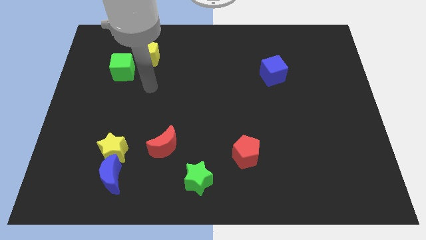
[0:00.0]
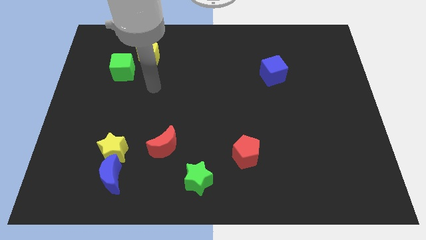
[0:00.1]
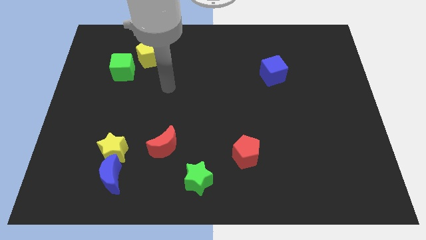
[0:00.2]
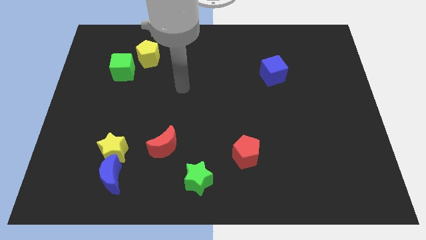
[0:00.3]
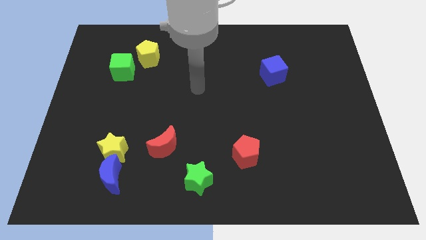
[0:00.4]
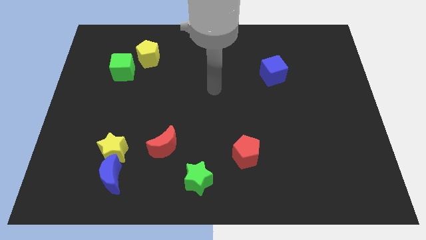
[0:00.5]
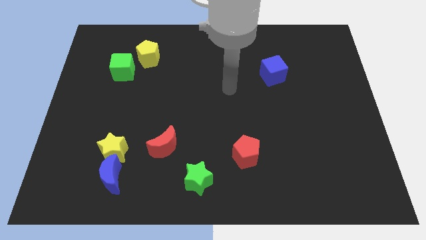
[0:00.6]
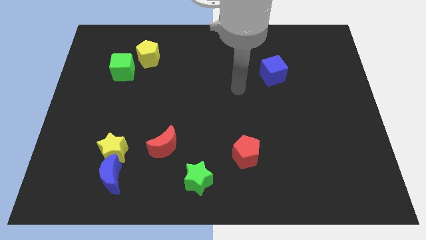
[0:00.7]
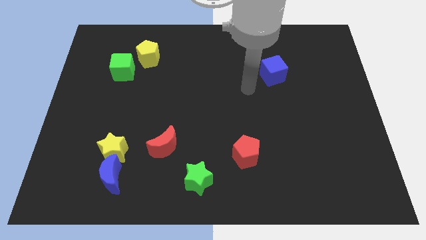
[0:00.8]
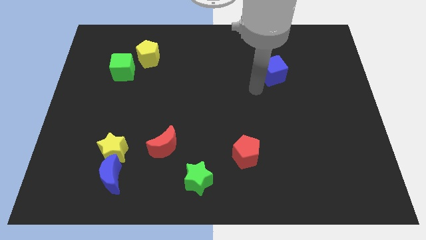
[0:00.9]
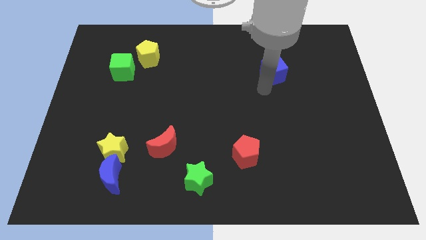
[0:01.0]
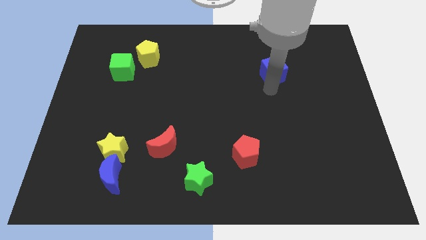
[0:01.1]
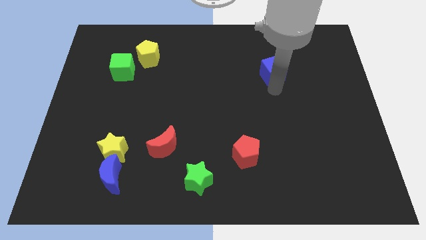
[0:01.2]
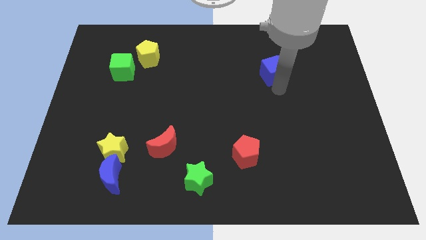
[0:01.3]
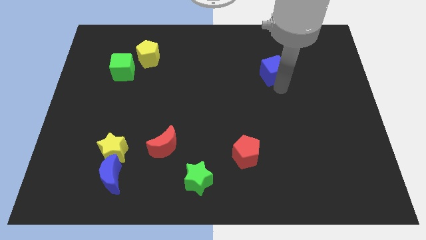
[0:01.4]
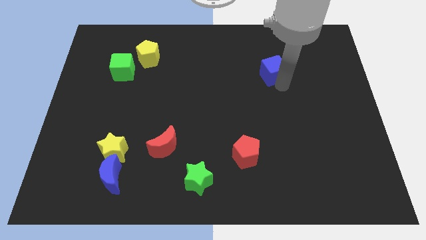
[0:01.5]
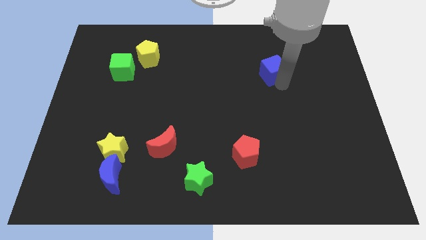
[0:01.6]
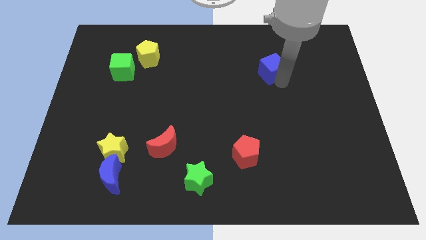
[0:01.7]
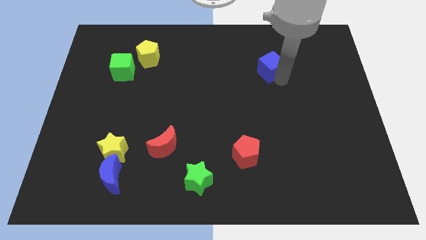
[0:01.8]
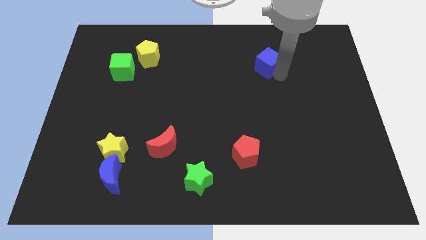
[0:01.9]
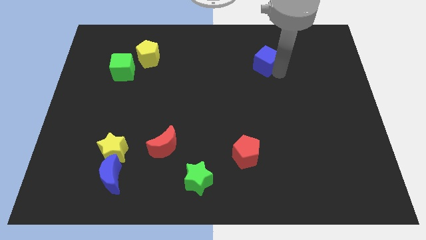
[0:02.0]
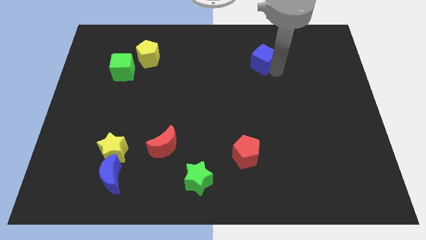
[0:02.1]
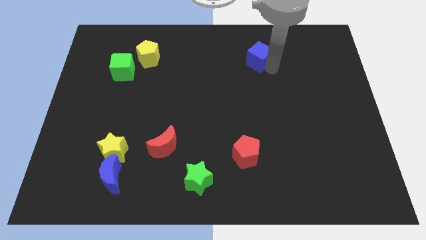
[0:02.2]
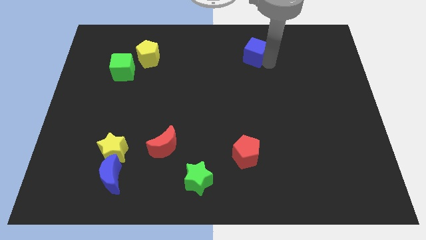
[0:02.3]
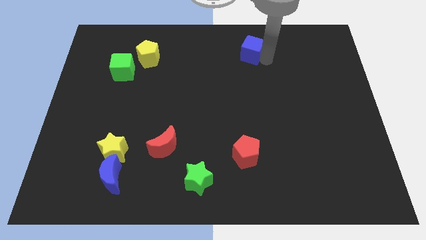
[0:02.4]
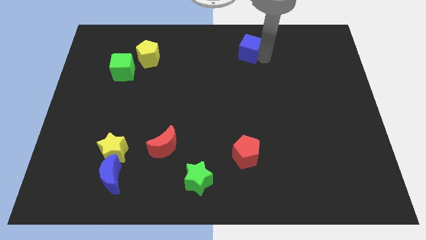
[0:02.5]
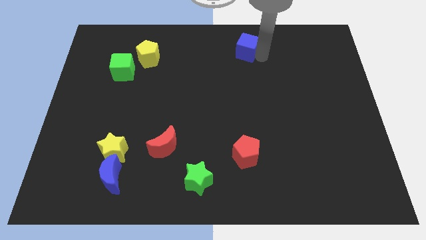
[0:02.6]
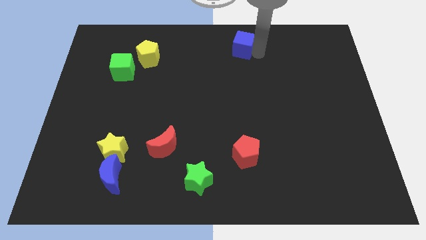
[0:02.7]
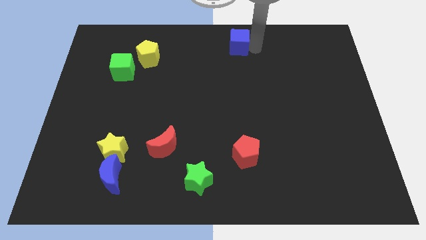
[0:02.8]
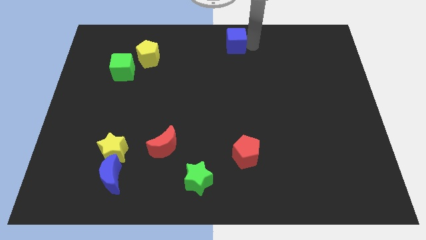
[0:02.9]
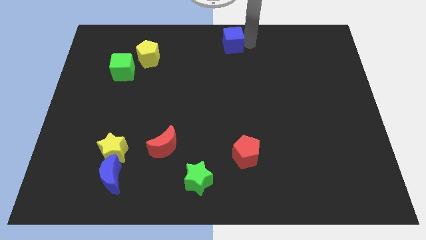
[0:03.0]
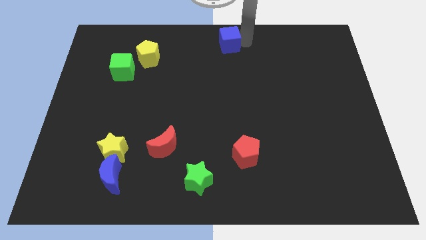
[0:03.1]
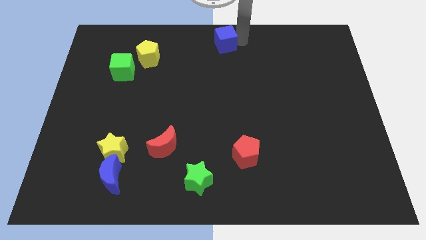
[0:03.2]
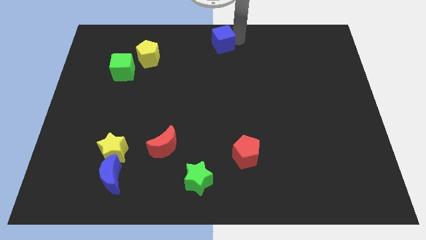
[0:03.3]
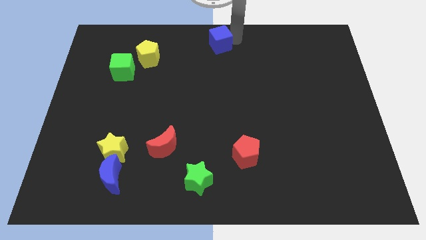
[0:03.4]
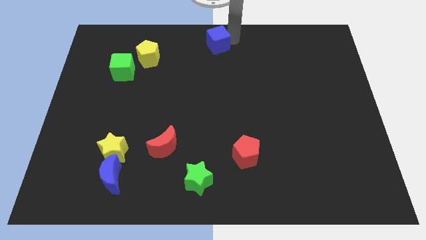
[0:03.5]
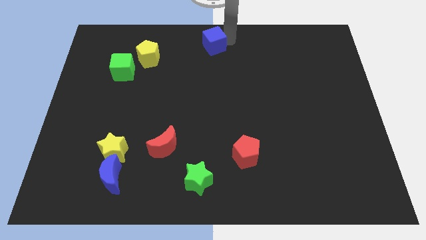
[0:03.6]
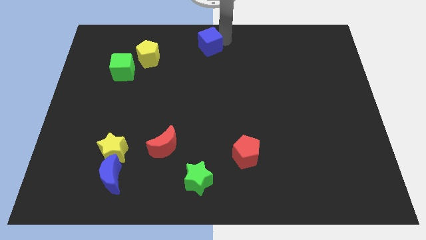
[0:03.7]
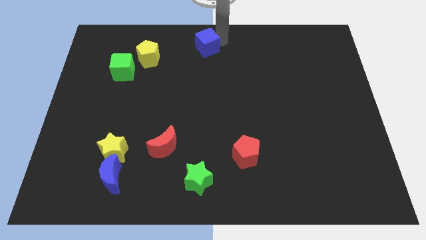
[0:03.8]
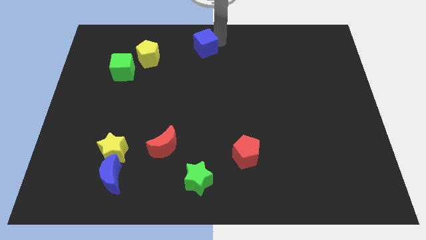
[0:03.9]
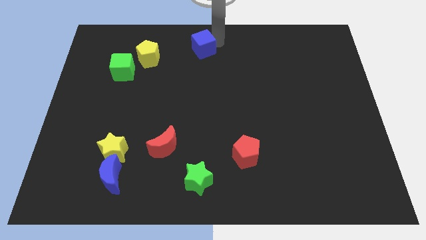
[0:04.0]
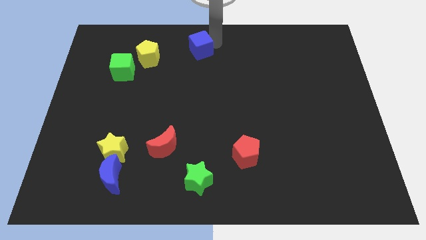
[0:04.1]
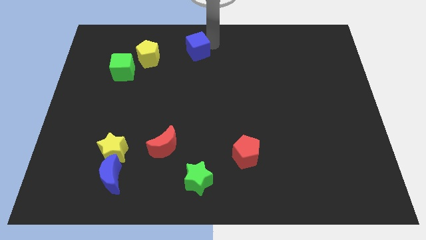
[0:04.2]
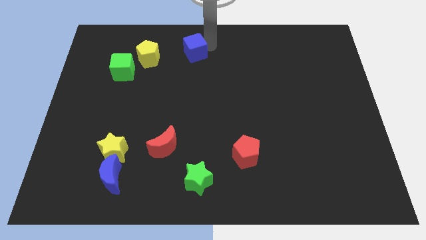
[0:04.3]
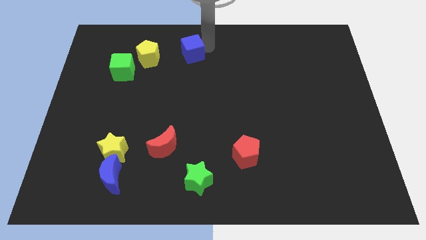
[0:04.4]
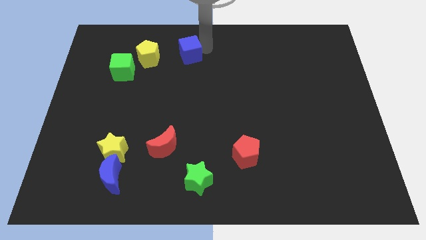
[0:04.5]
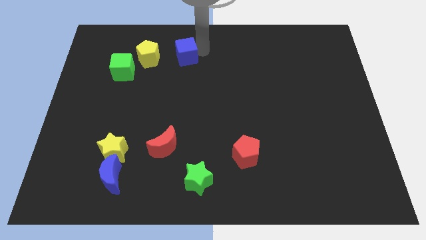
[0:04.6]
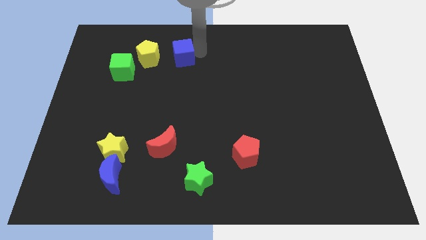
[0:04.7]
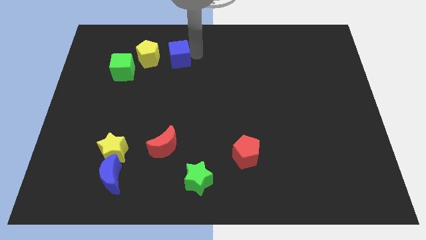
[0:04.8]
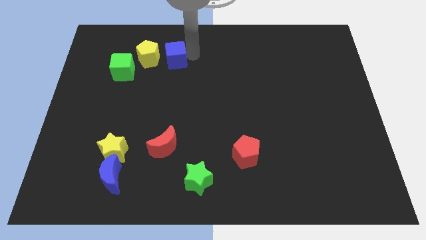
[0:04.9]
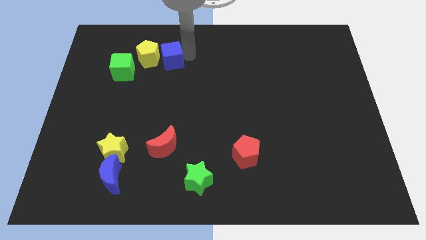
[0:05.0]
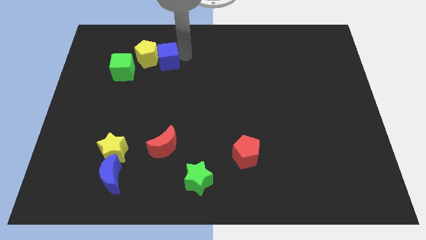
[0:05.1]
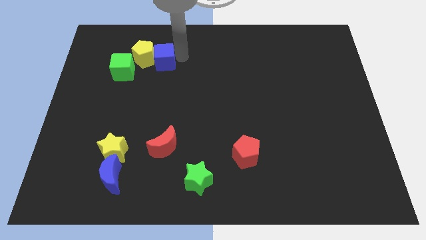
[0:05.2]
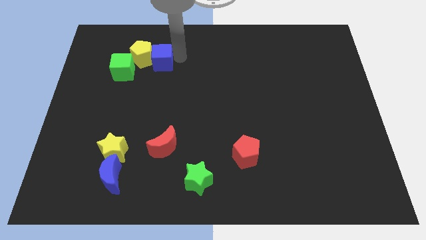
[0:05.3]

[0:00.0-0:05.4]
push the blue cube to the yellow pentagon

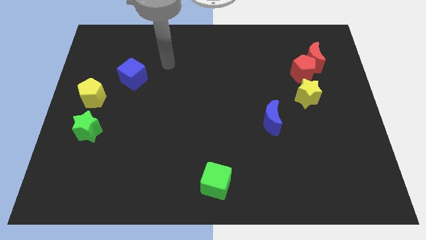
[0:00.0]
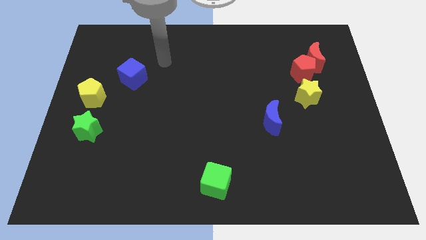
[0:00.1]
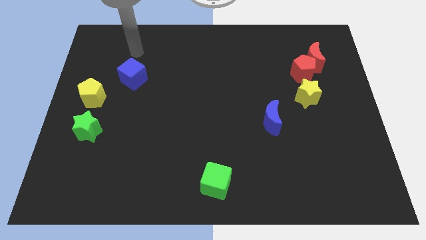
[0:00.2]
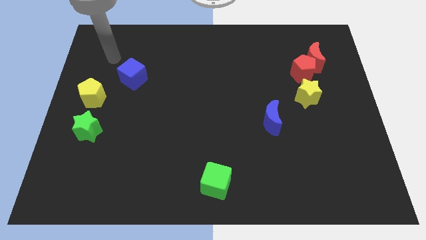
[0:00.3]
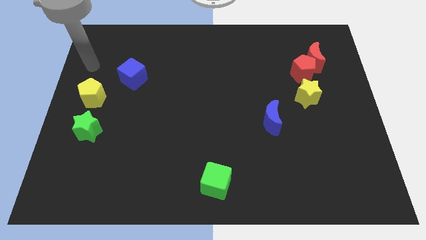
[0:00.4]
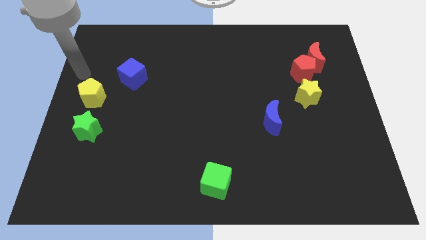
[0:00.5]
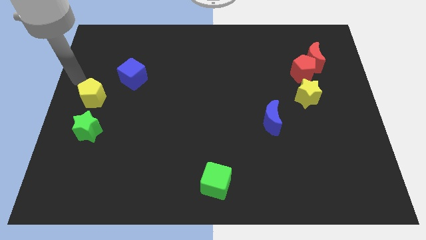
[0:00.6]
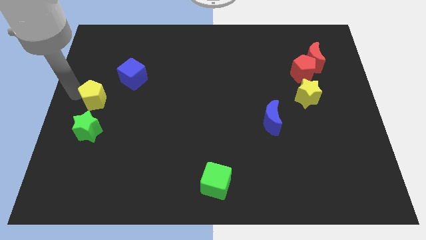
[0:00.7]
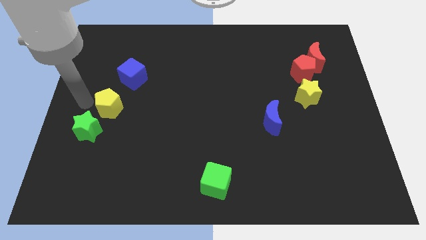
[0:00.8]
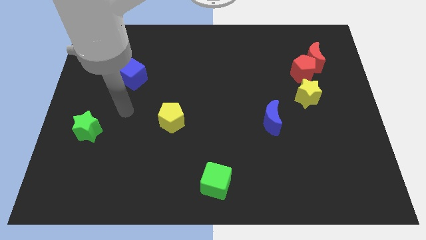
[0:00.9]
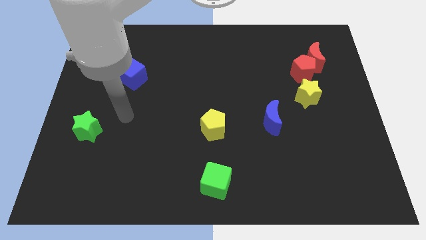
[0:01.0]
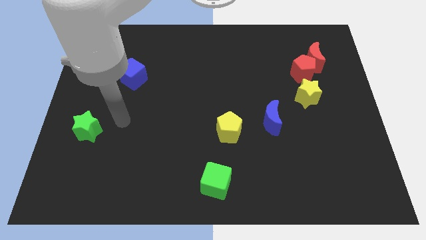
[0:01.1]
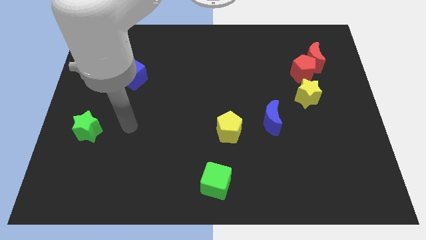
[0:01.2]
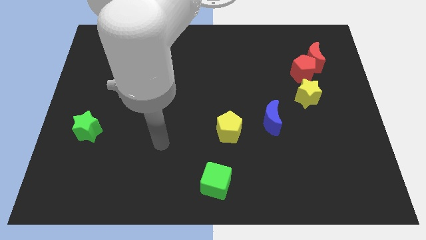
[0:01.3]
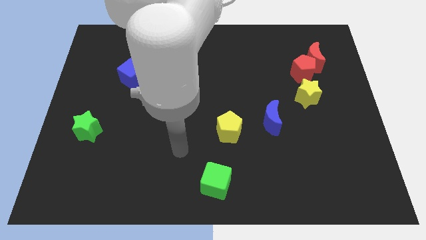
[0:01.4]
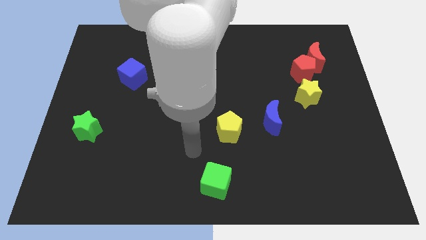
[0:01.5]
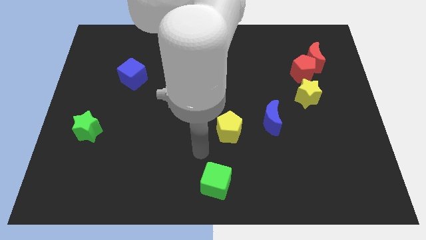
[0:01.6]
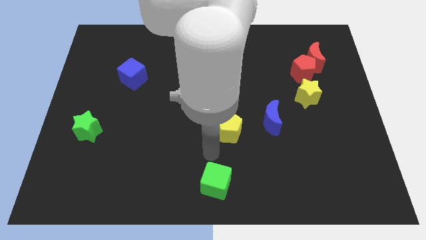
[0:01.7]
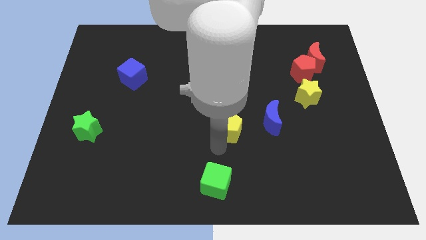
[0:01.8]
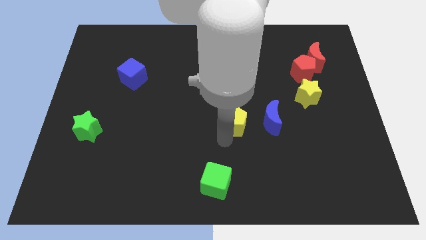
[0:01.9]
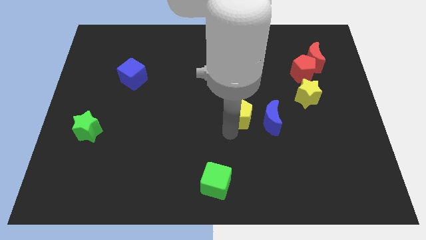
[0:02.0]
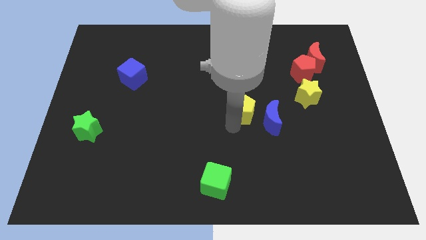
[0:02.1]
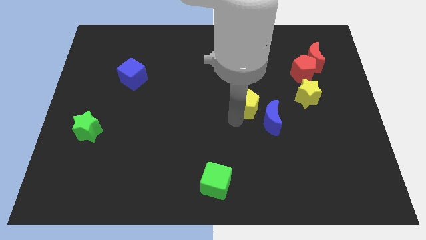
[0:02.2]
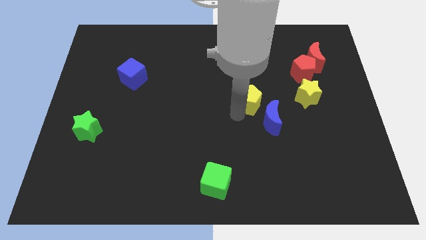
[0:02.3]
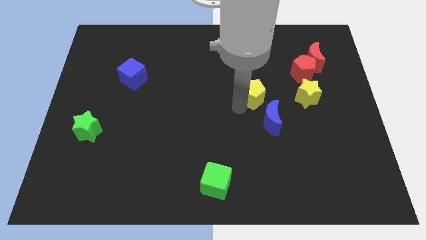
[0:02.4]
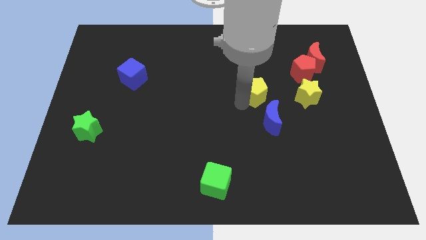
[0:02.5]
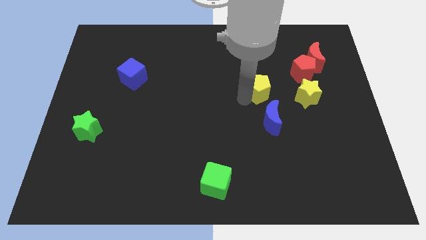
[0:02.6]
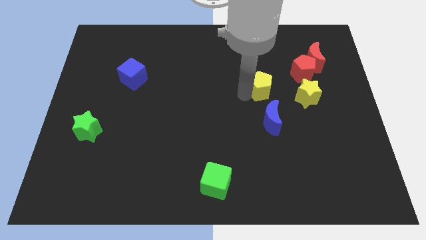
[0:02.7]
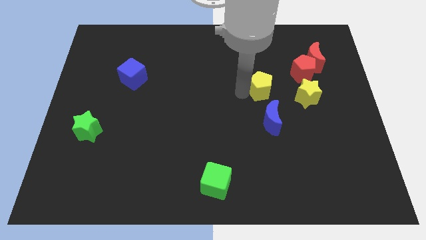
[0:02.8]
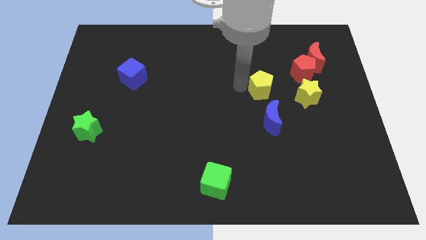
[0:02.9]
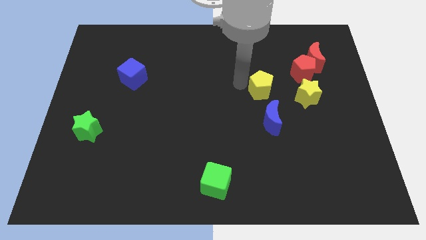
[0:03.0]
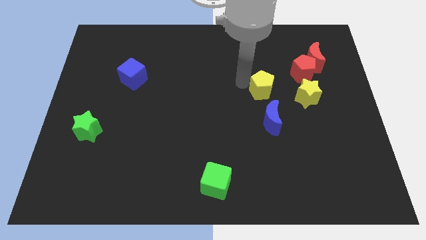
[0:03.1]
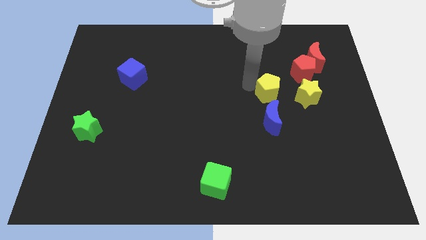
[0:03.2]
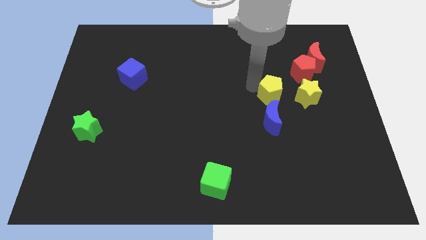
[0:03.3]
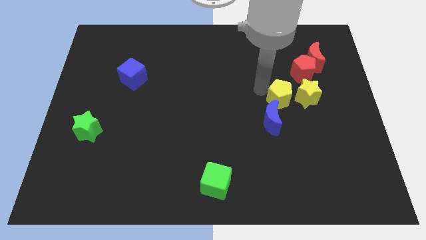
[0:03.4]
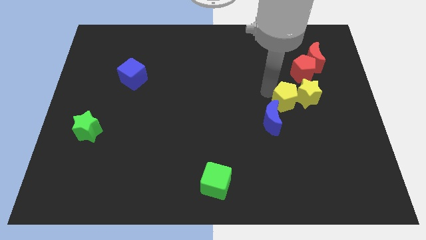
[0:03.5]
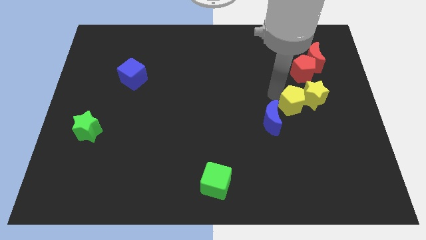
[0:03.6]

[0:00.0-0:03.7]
push the yellow pentagon next to the yellow star
